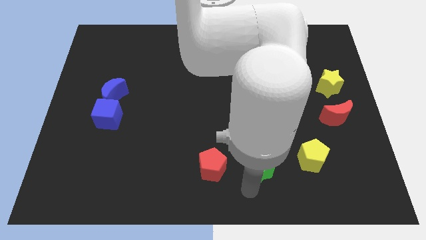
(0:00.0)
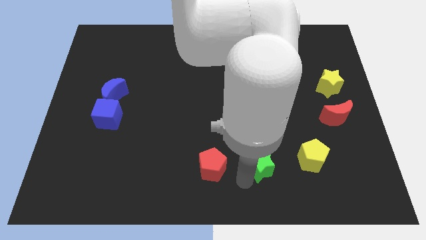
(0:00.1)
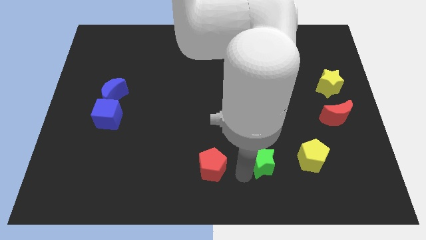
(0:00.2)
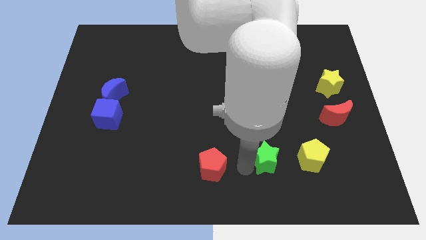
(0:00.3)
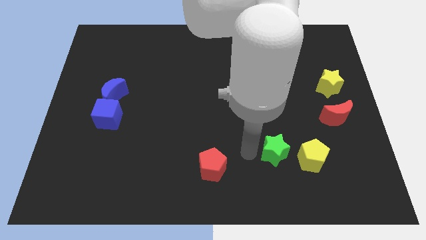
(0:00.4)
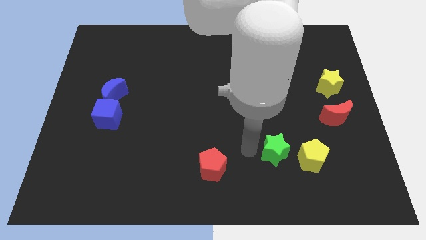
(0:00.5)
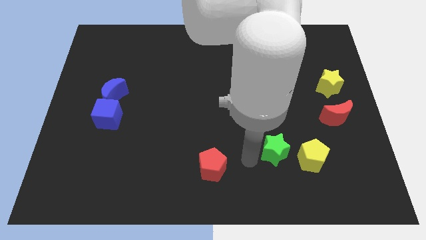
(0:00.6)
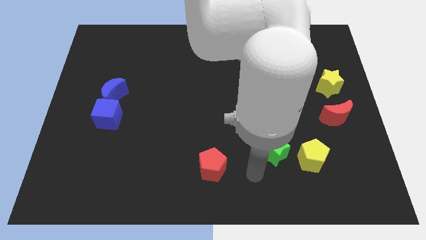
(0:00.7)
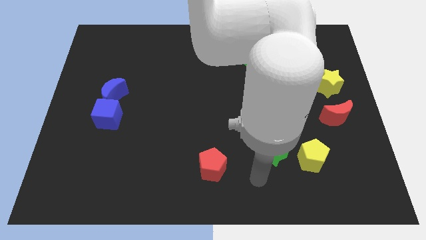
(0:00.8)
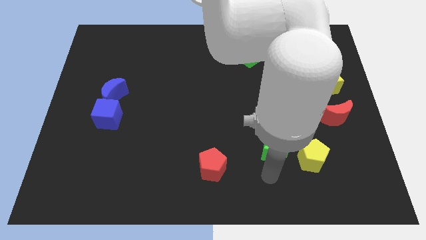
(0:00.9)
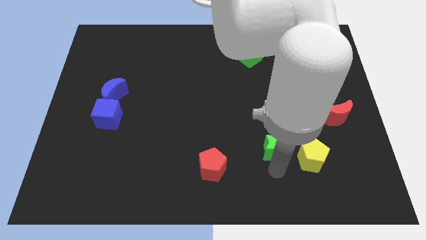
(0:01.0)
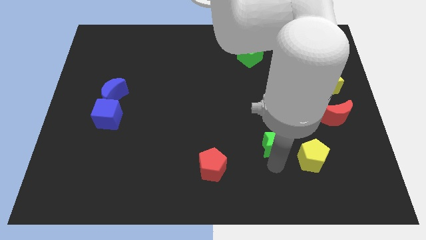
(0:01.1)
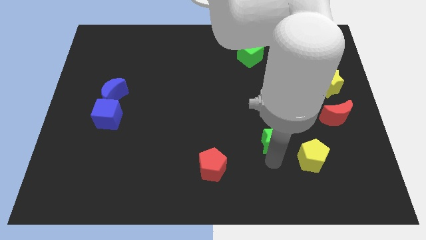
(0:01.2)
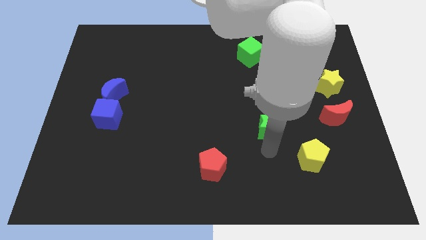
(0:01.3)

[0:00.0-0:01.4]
slide the green star diagonally on the top left side of the yellow pentagon

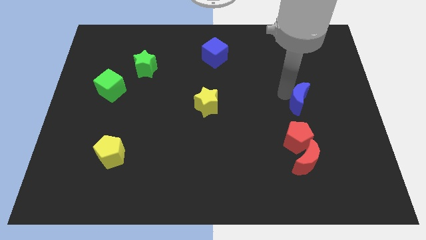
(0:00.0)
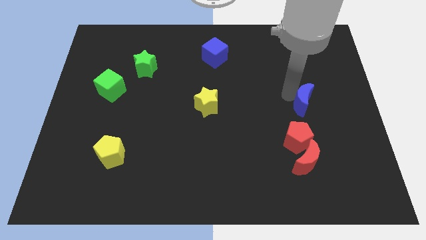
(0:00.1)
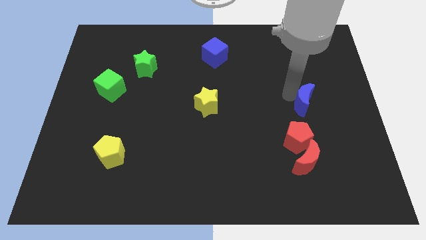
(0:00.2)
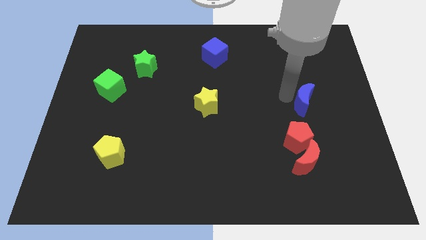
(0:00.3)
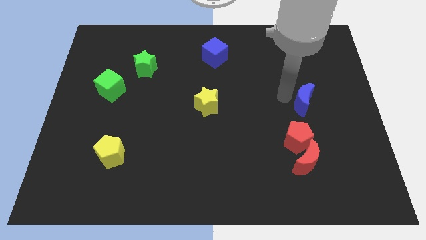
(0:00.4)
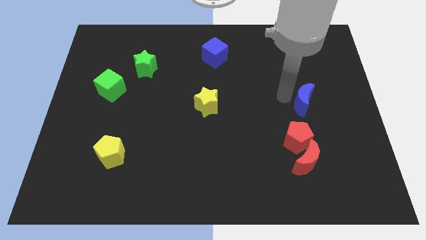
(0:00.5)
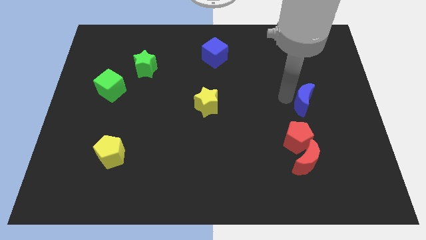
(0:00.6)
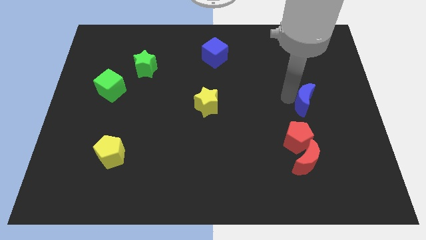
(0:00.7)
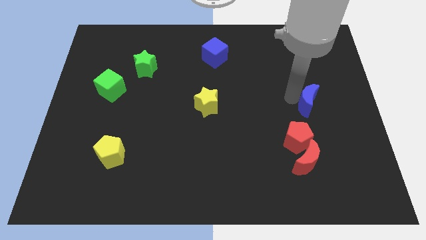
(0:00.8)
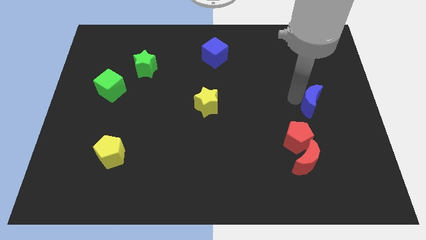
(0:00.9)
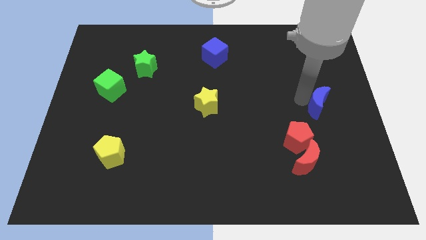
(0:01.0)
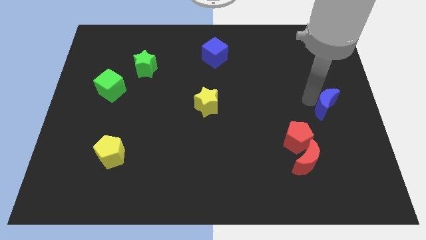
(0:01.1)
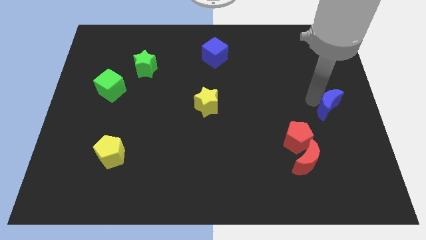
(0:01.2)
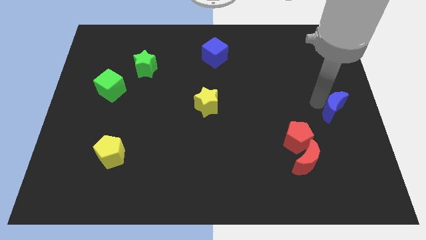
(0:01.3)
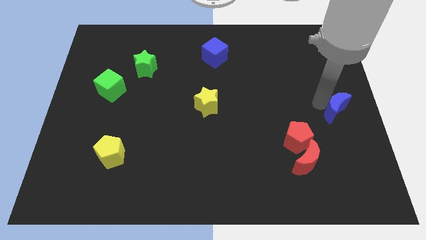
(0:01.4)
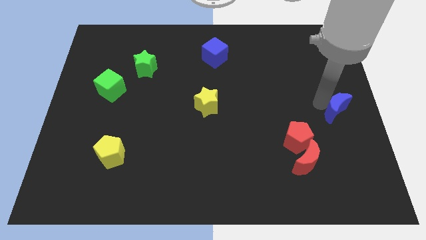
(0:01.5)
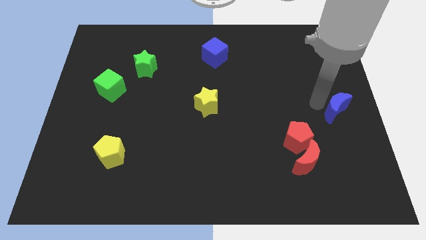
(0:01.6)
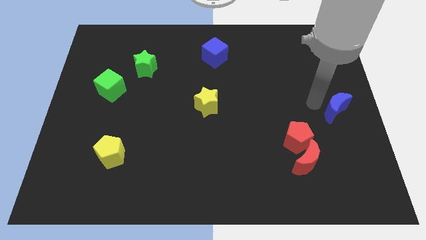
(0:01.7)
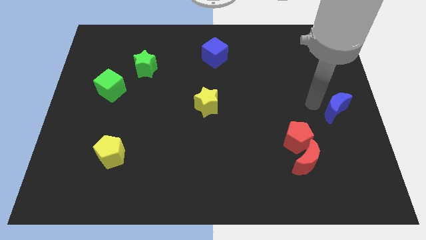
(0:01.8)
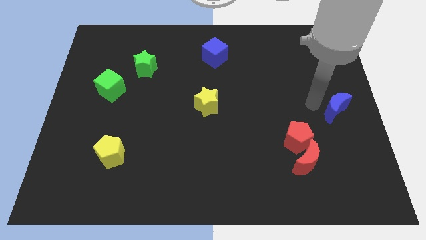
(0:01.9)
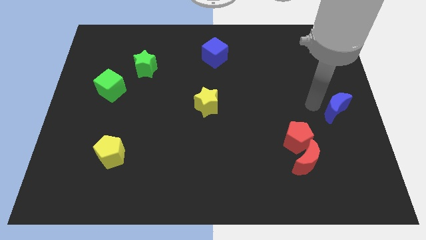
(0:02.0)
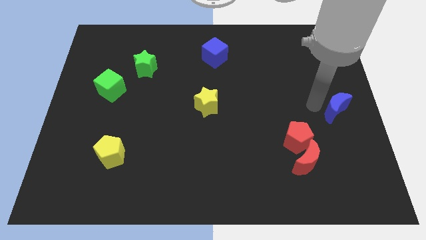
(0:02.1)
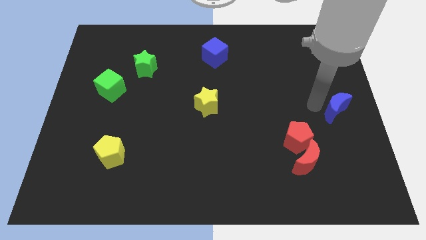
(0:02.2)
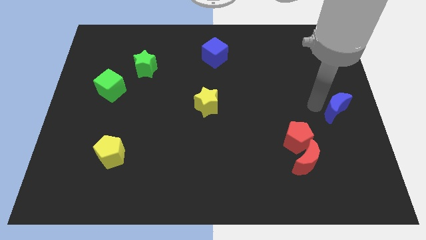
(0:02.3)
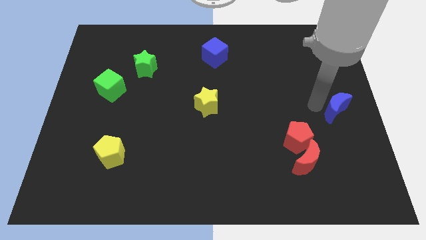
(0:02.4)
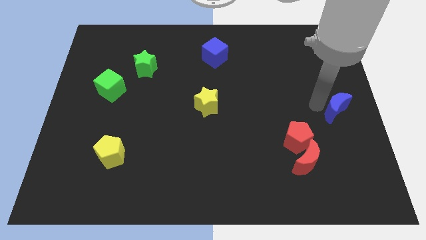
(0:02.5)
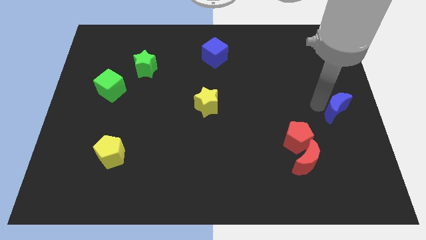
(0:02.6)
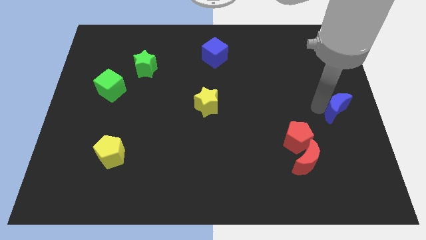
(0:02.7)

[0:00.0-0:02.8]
place the blue moon at the top right side of the red pentagon

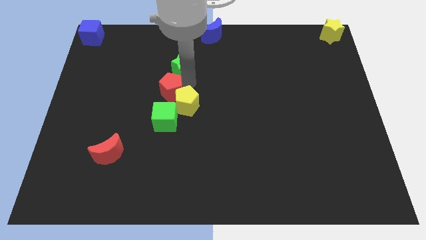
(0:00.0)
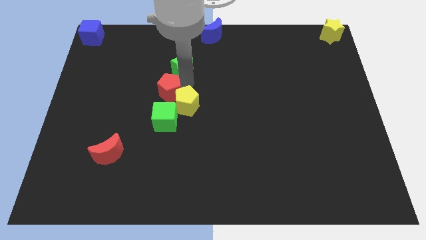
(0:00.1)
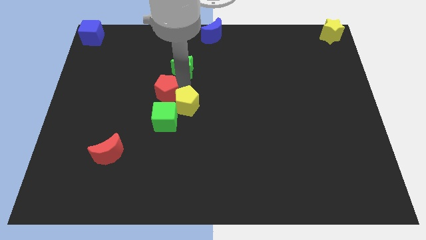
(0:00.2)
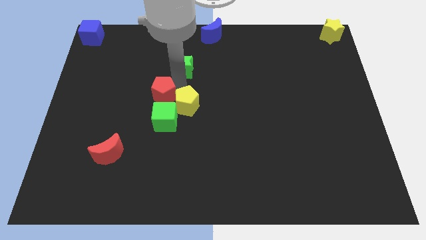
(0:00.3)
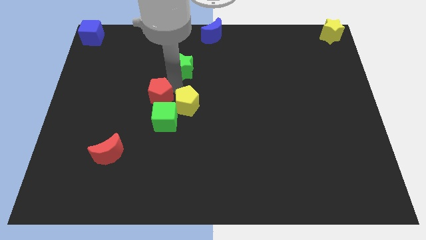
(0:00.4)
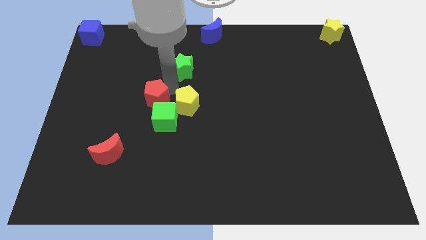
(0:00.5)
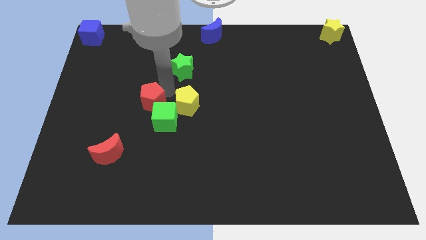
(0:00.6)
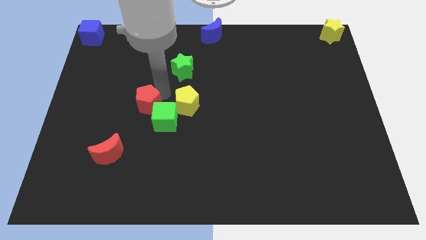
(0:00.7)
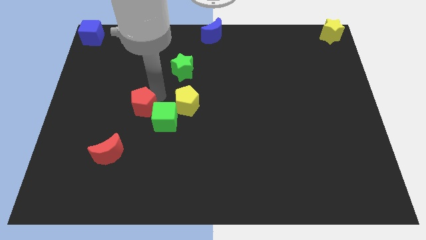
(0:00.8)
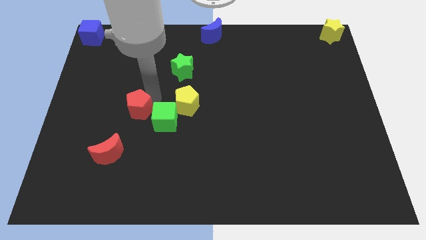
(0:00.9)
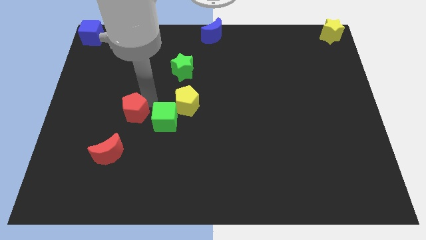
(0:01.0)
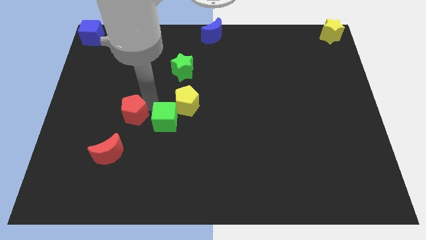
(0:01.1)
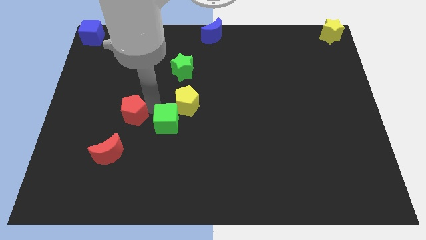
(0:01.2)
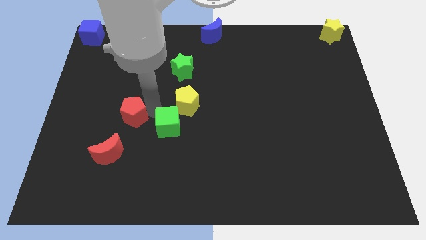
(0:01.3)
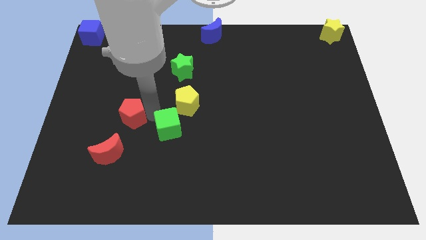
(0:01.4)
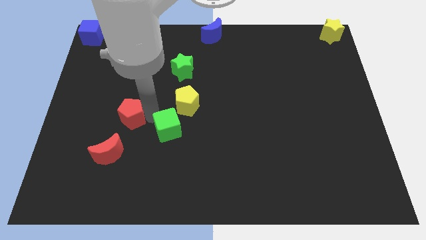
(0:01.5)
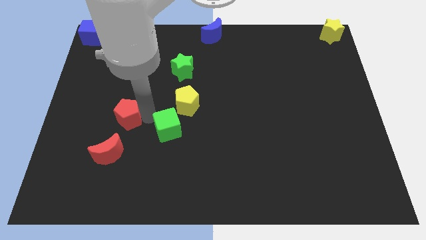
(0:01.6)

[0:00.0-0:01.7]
separate red pentagon from yellow pentagon

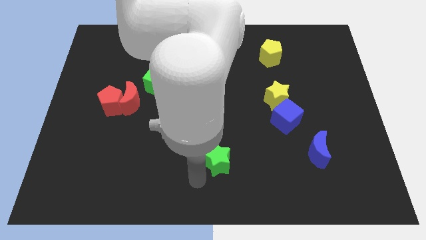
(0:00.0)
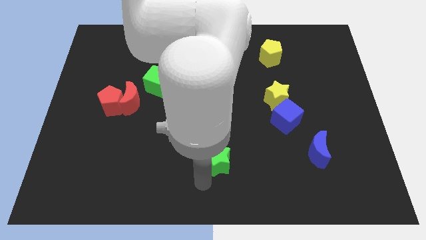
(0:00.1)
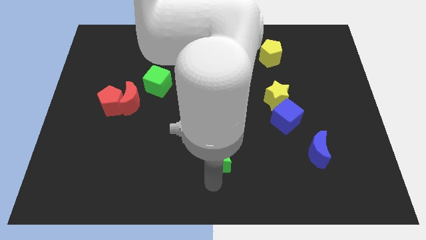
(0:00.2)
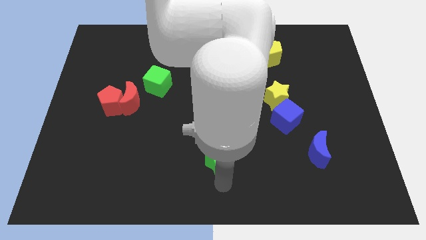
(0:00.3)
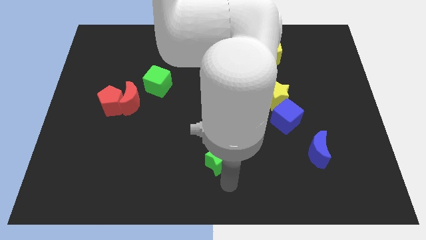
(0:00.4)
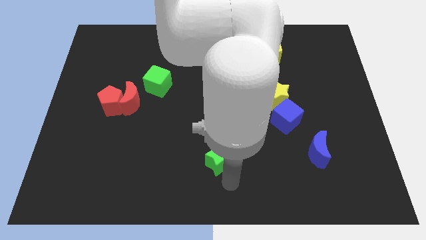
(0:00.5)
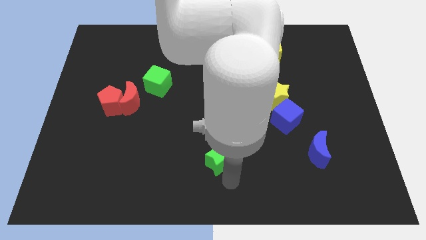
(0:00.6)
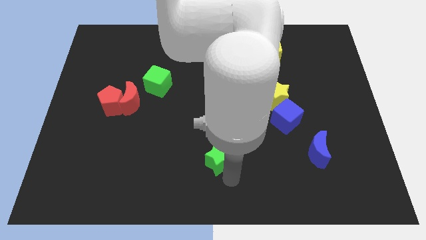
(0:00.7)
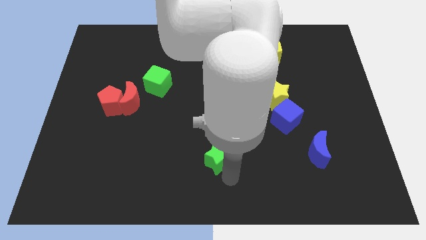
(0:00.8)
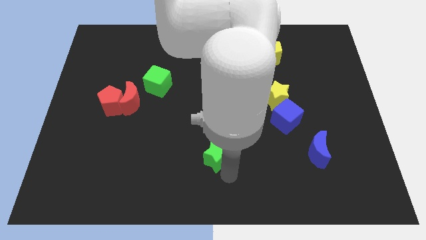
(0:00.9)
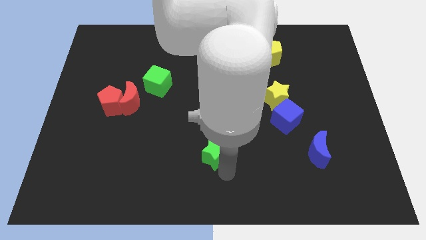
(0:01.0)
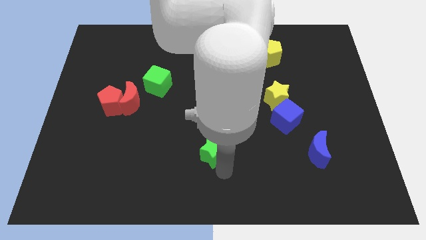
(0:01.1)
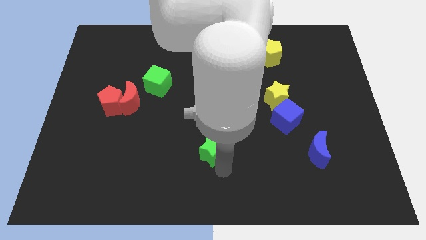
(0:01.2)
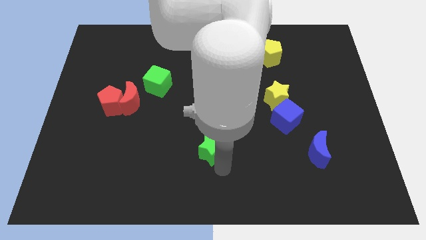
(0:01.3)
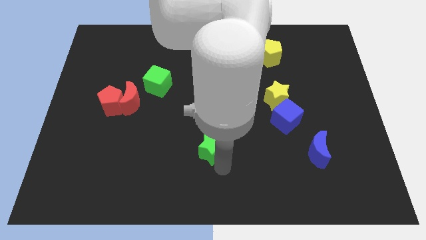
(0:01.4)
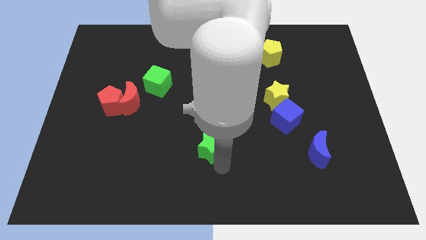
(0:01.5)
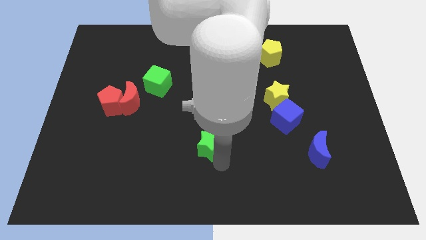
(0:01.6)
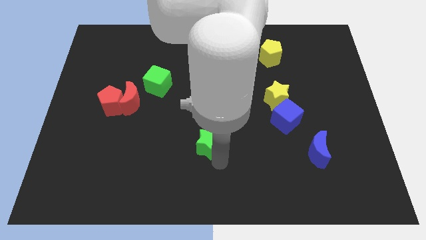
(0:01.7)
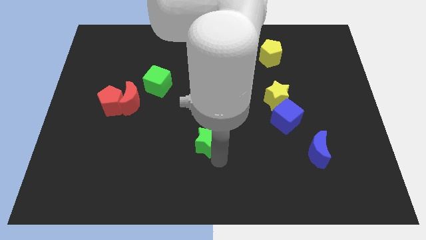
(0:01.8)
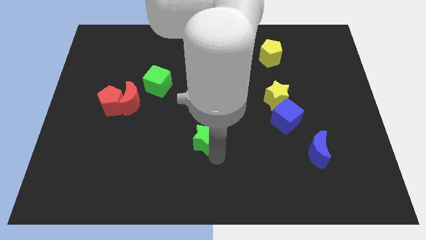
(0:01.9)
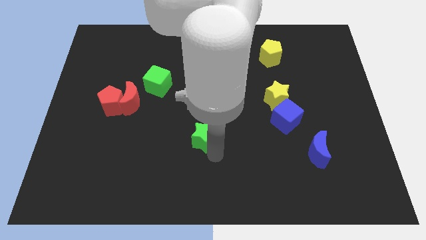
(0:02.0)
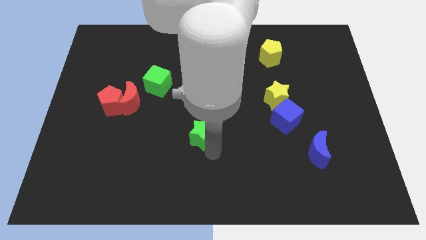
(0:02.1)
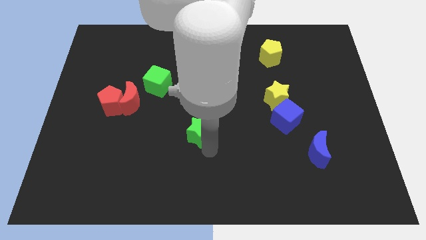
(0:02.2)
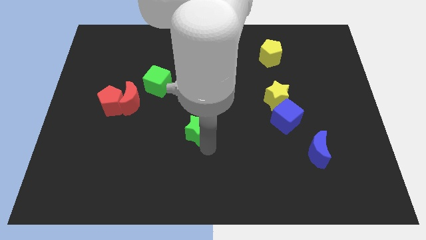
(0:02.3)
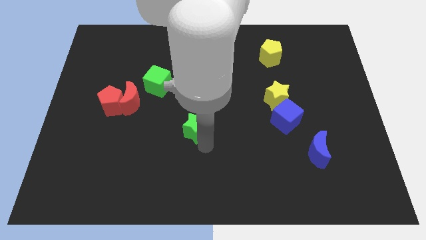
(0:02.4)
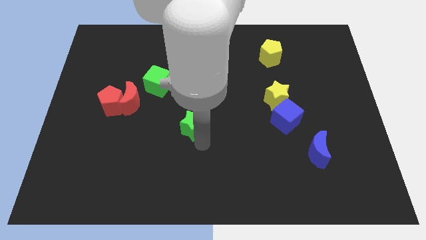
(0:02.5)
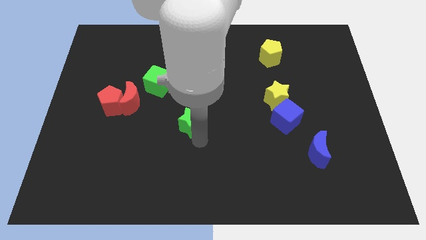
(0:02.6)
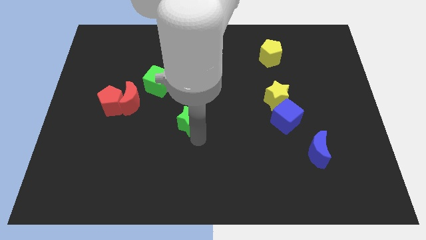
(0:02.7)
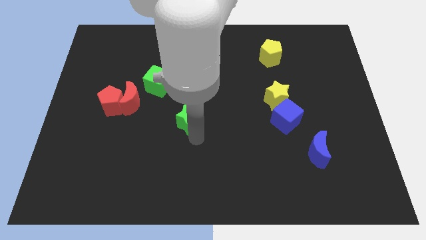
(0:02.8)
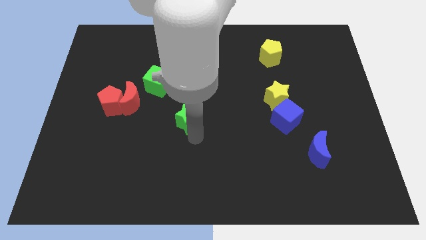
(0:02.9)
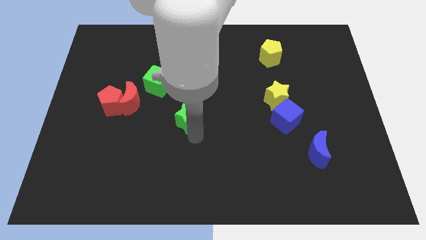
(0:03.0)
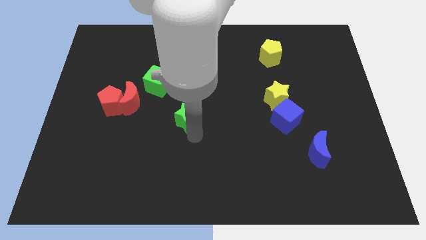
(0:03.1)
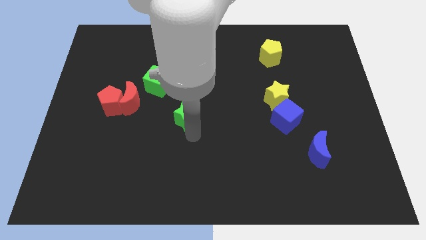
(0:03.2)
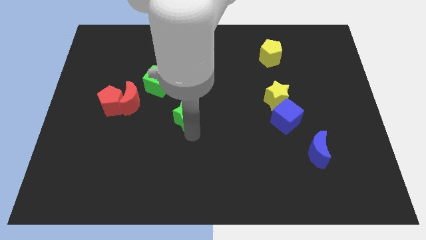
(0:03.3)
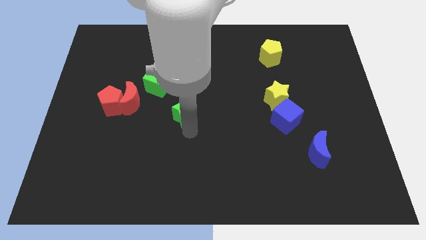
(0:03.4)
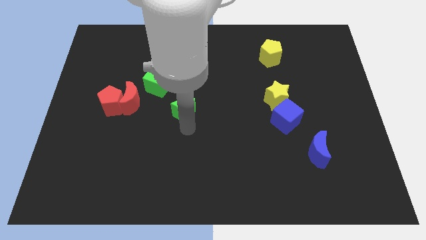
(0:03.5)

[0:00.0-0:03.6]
drag the green star slightly upwards
